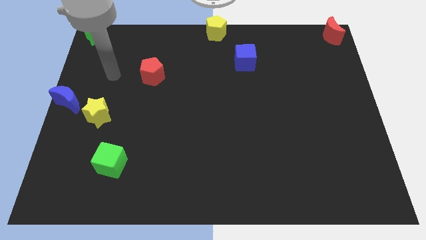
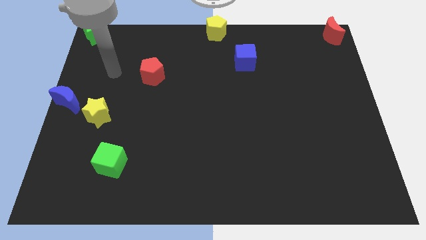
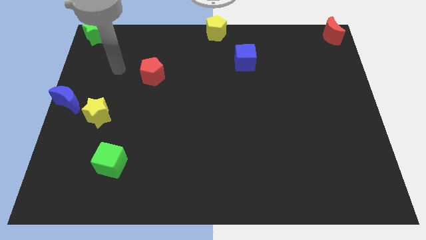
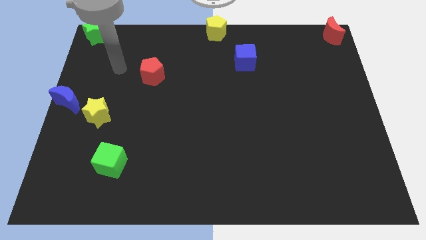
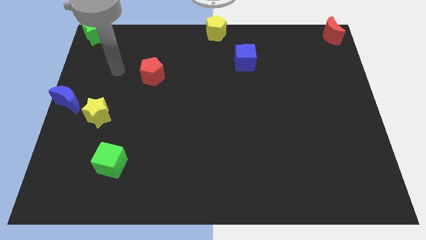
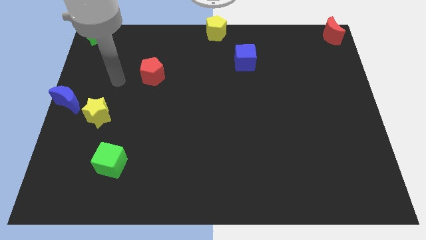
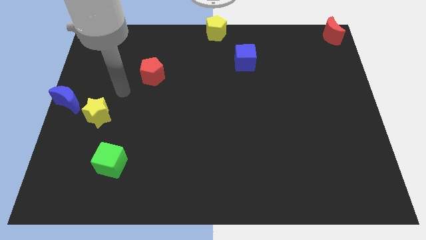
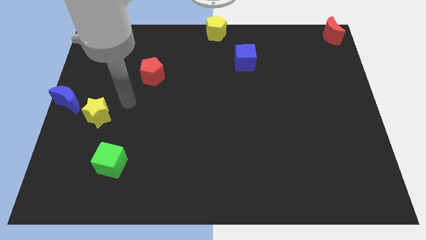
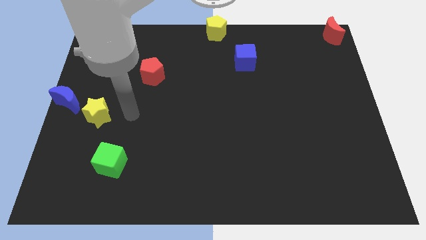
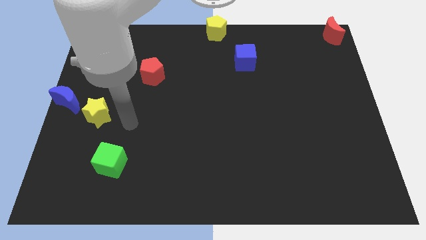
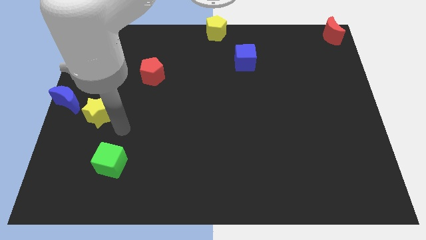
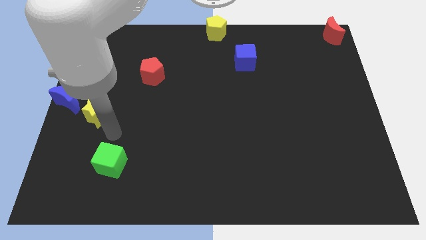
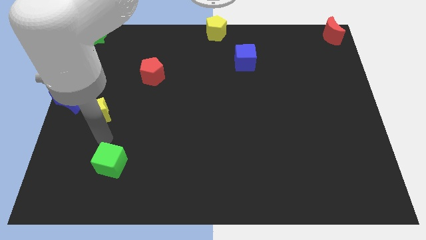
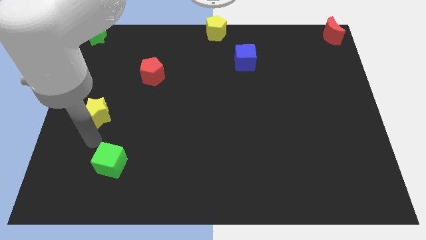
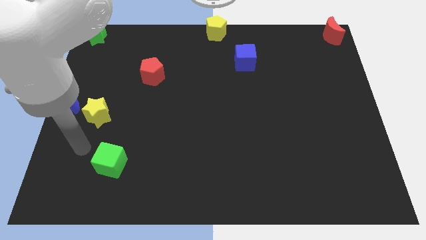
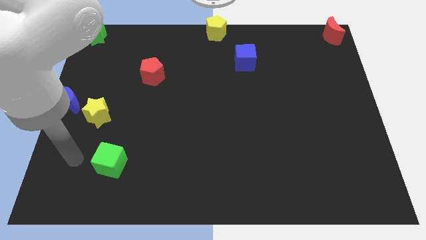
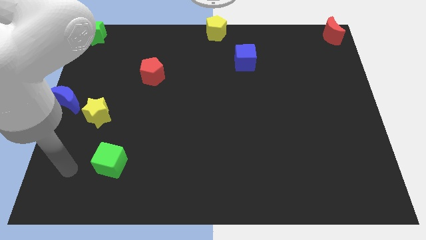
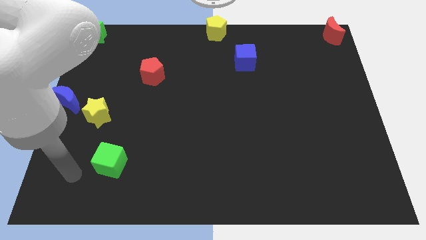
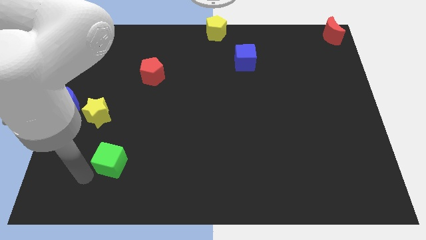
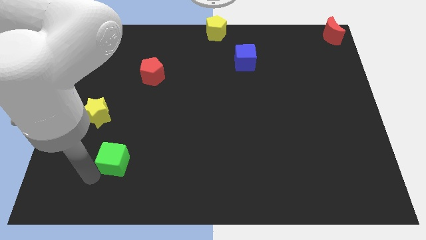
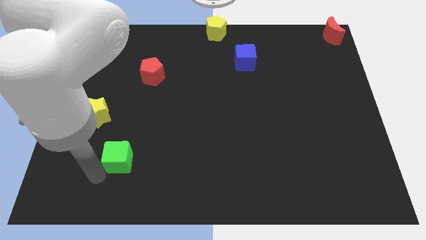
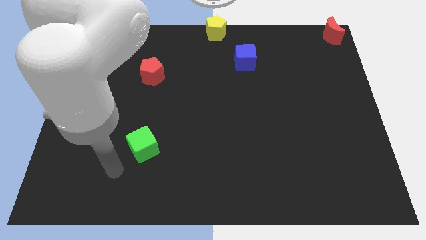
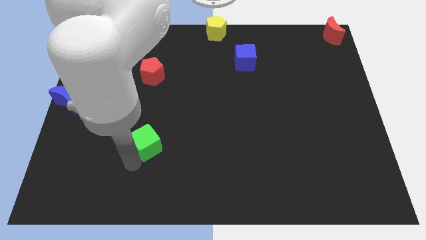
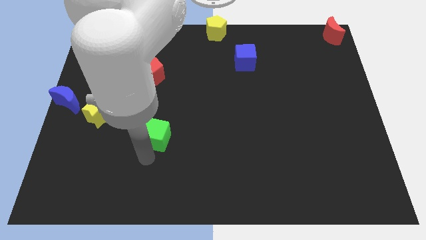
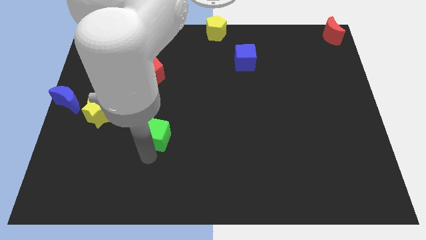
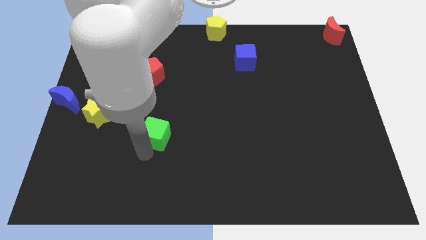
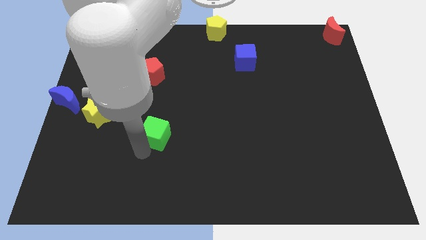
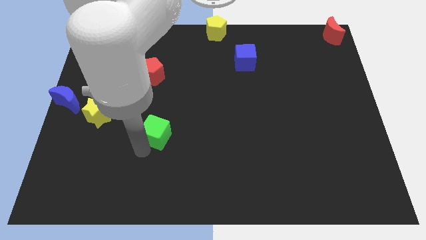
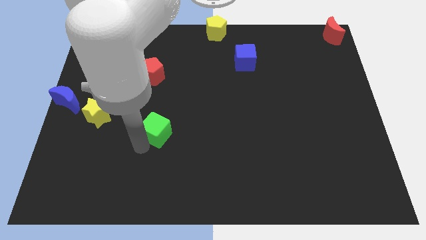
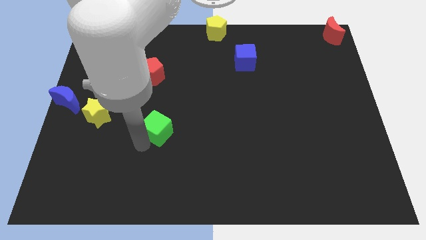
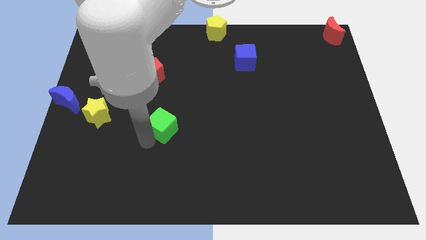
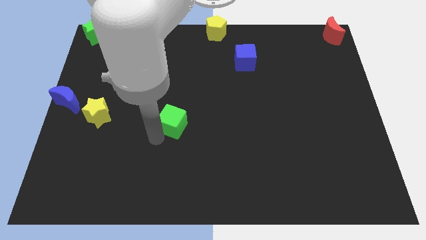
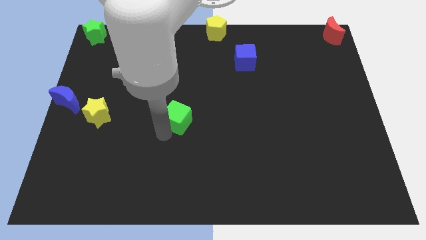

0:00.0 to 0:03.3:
move the green cube right to the yellow star

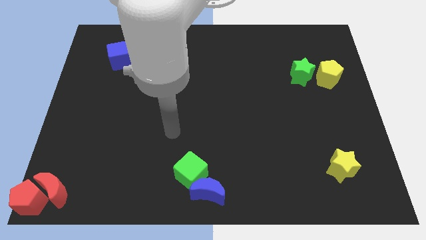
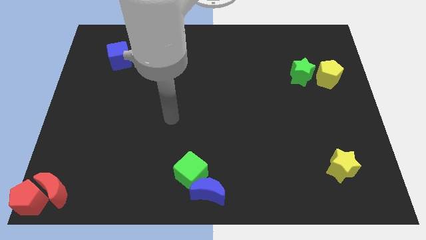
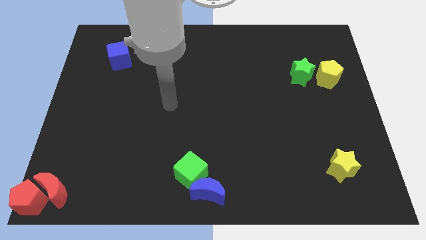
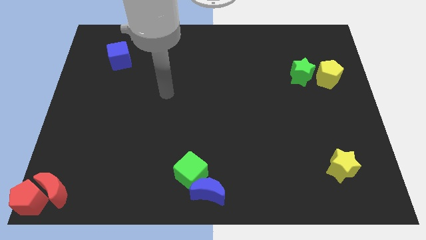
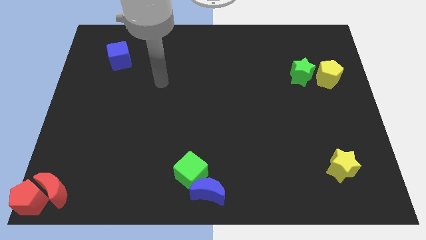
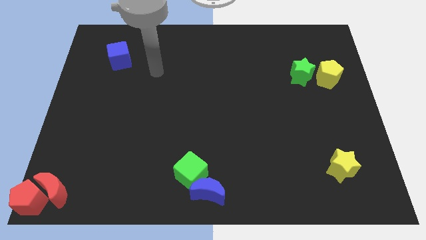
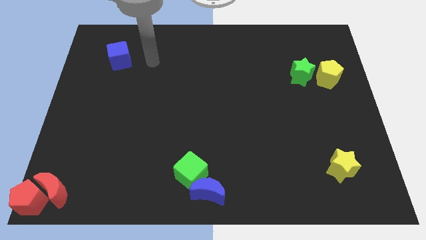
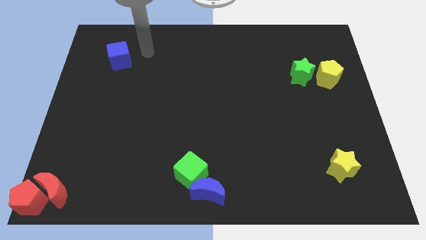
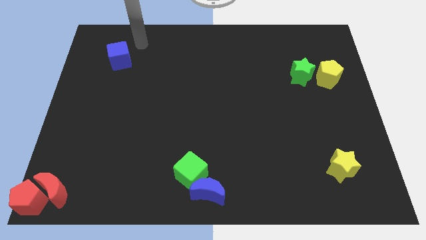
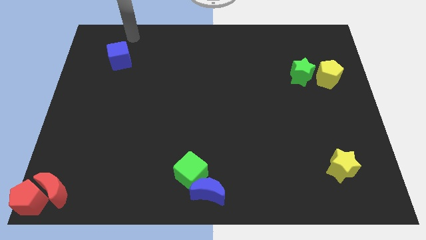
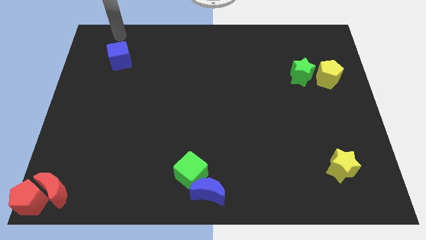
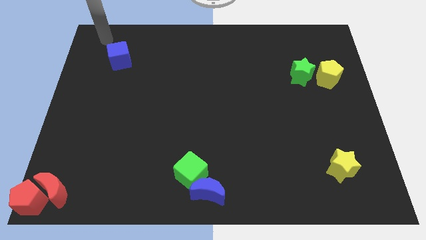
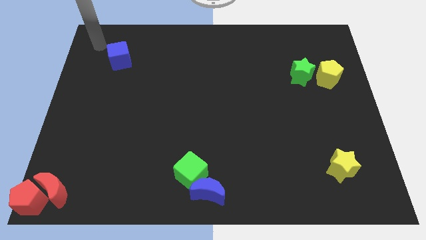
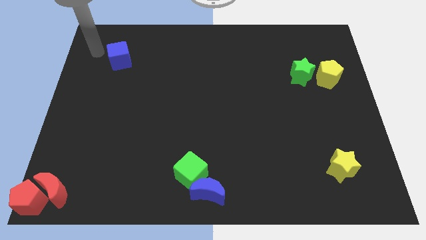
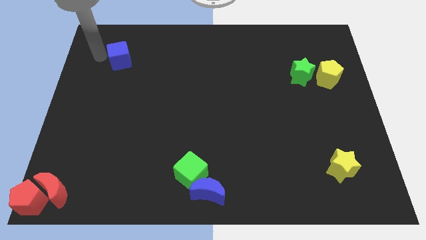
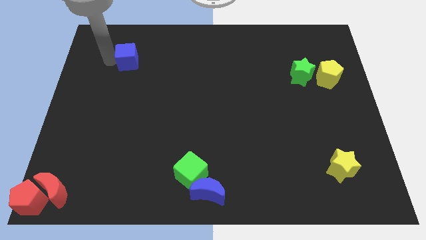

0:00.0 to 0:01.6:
tab the left side of the blue cube

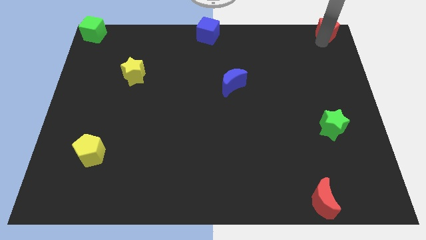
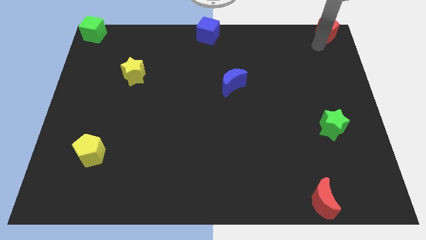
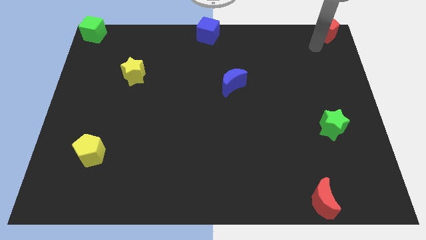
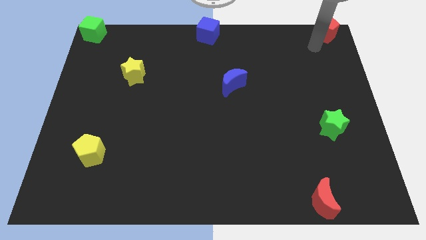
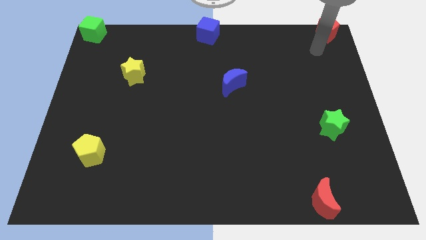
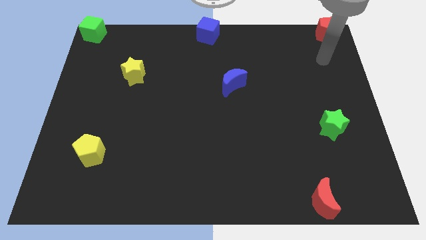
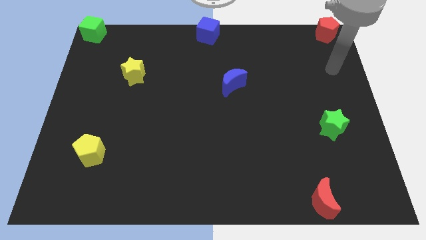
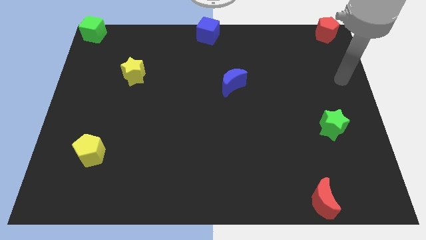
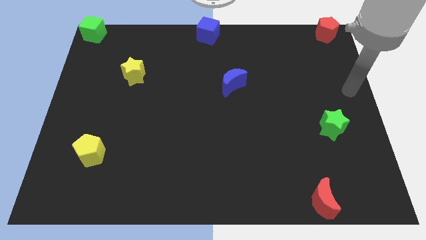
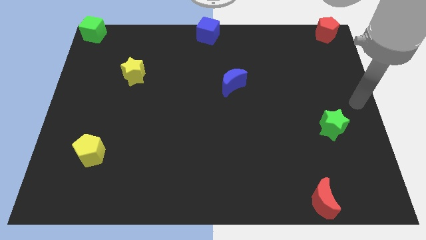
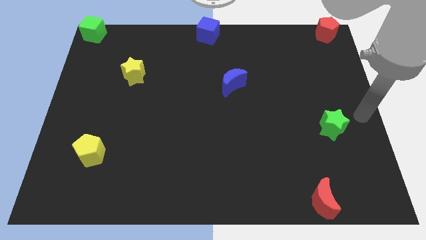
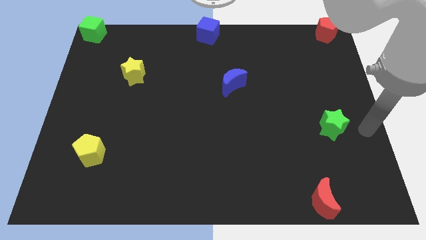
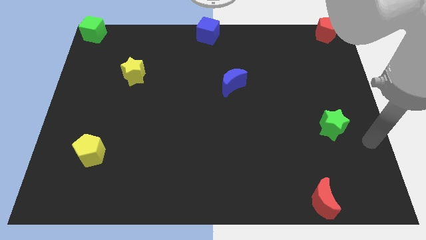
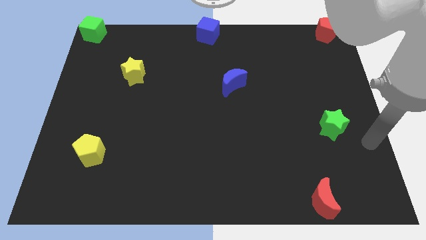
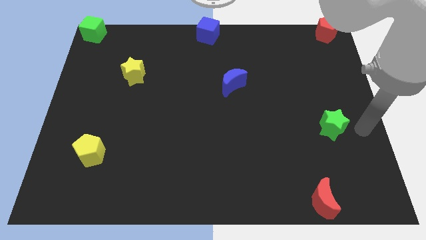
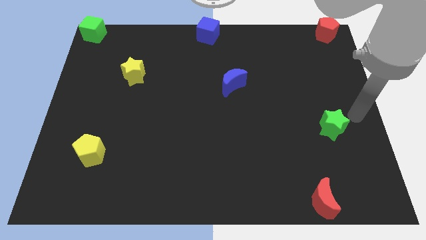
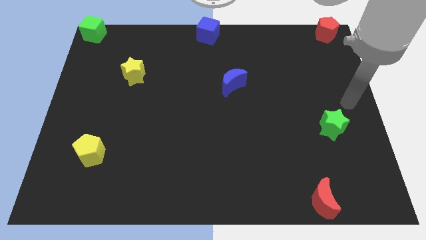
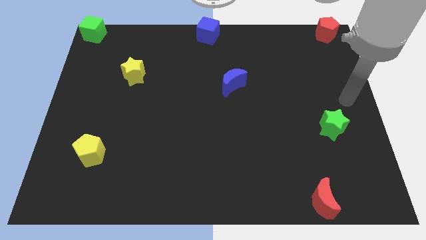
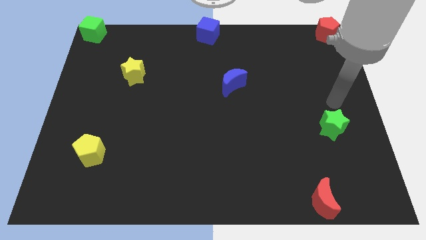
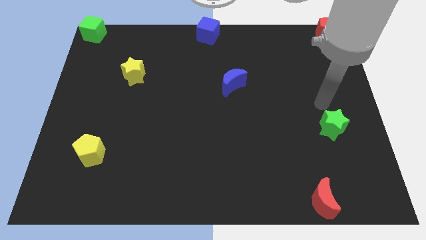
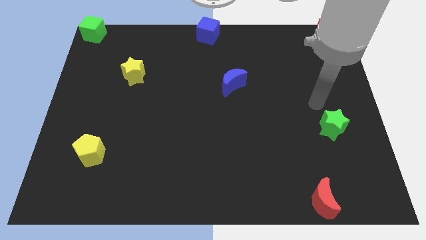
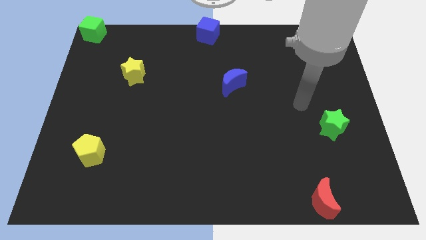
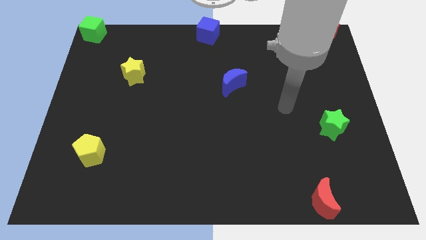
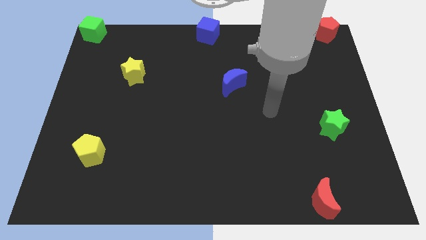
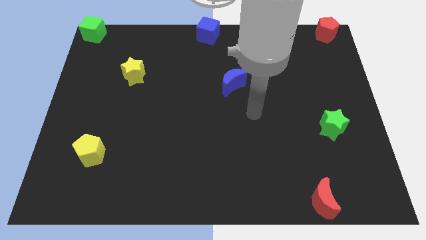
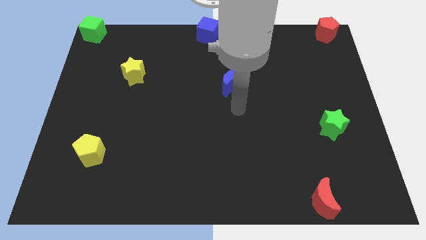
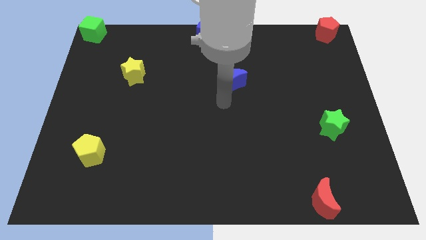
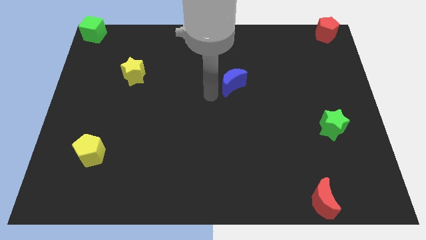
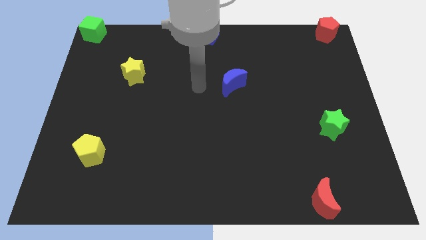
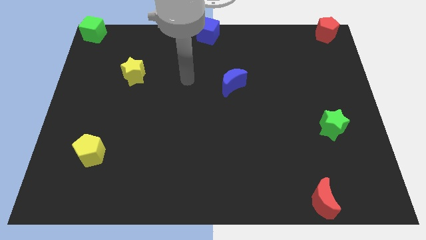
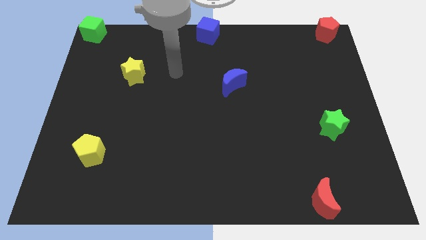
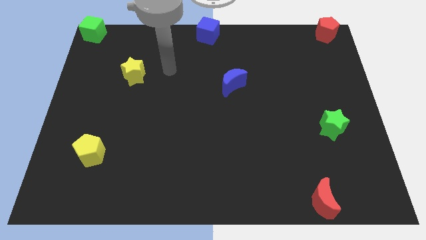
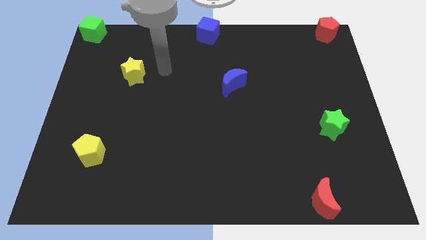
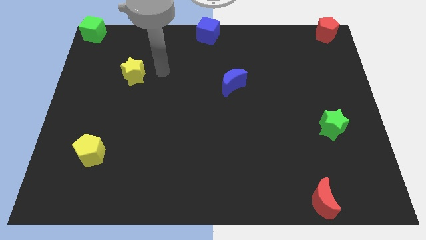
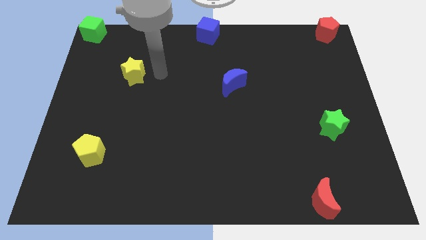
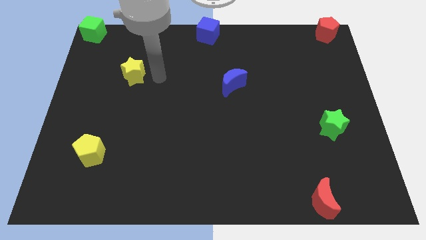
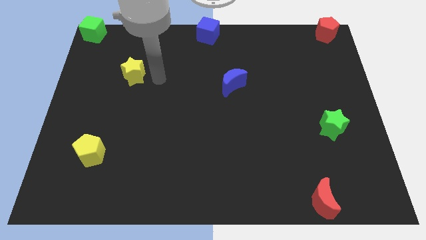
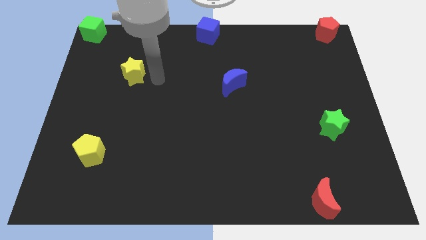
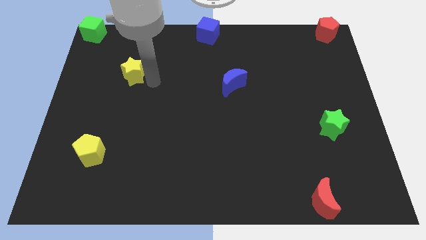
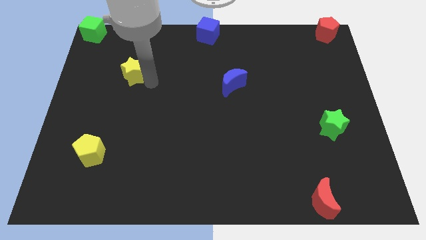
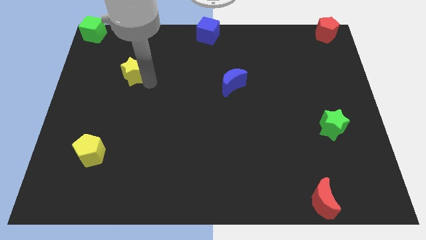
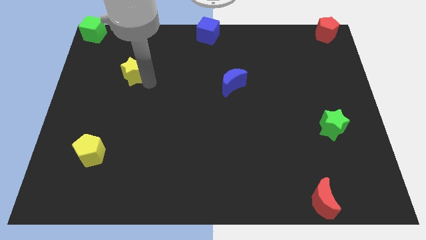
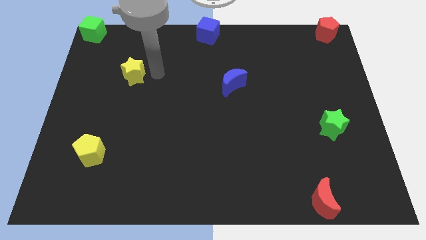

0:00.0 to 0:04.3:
move your arm away from the red pentagon
